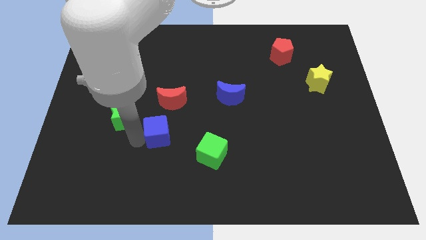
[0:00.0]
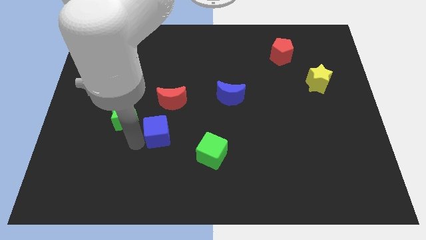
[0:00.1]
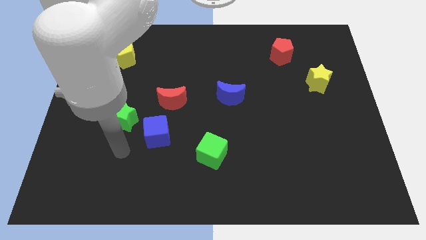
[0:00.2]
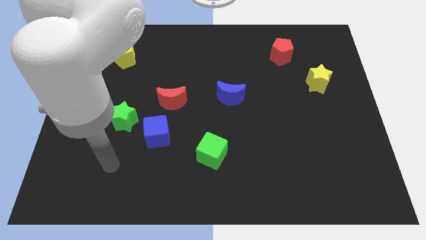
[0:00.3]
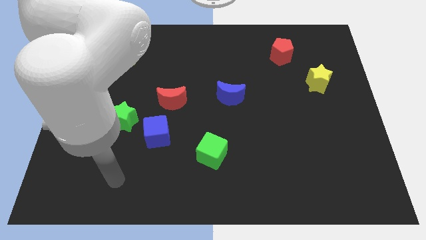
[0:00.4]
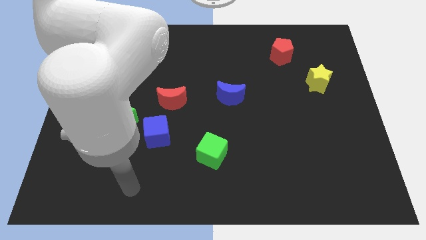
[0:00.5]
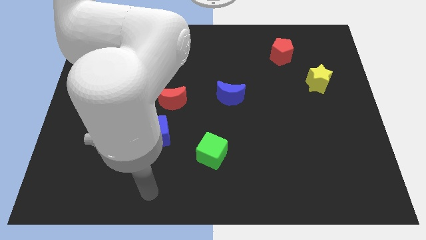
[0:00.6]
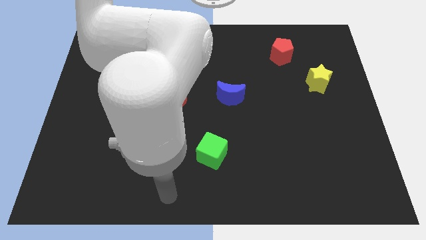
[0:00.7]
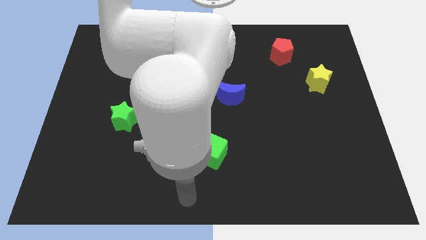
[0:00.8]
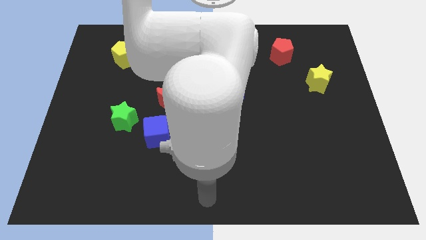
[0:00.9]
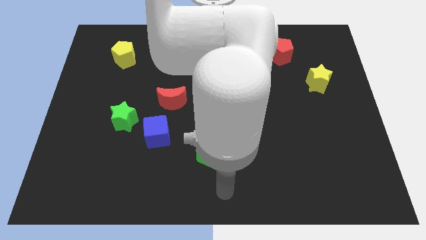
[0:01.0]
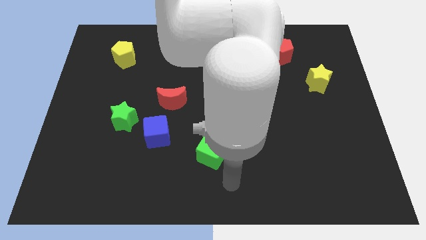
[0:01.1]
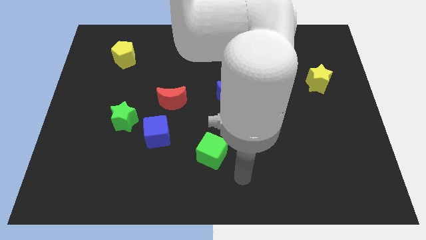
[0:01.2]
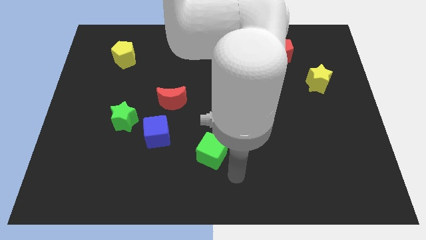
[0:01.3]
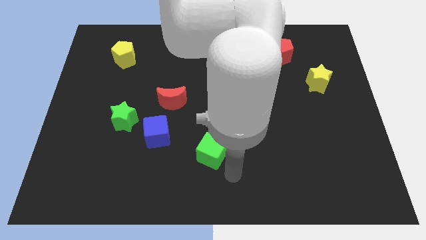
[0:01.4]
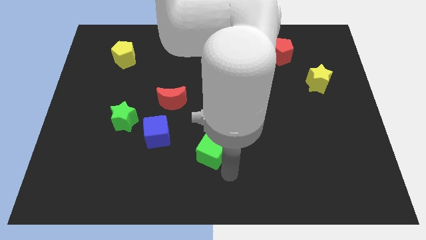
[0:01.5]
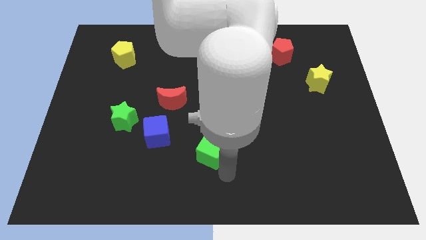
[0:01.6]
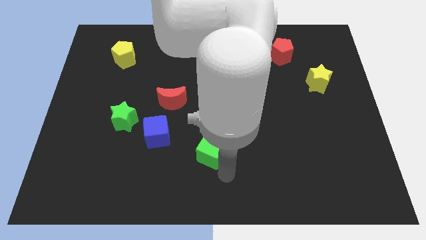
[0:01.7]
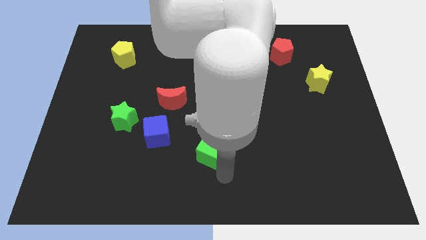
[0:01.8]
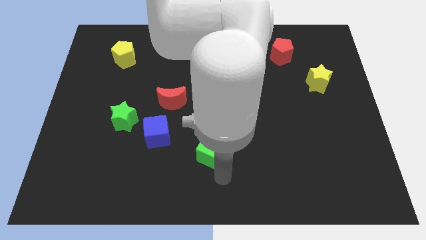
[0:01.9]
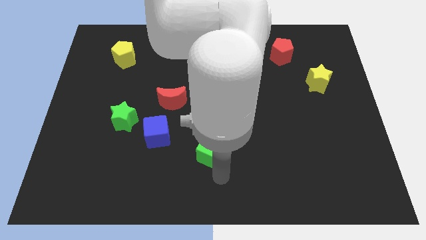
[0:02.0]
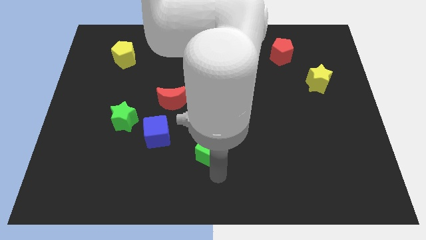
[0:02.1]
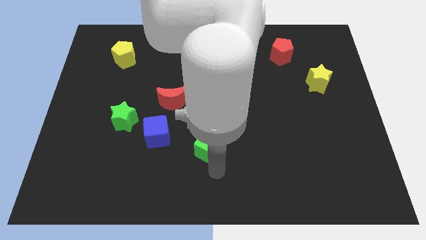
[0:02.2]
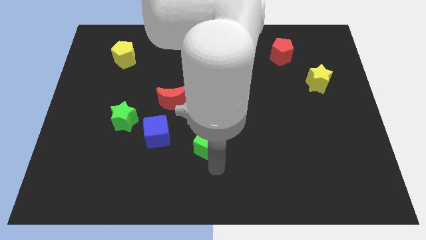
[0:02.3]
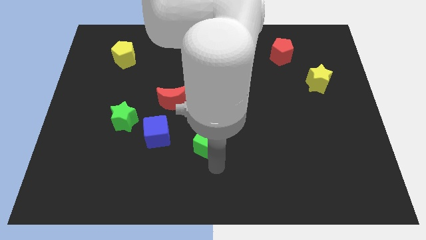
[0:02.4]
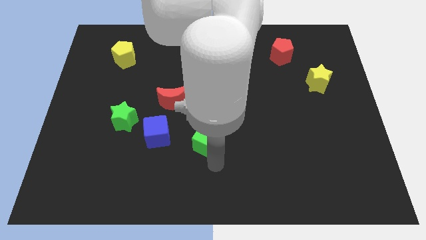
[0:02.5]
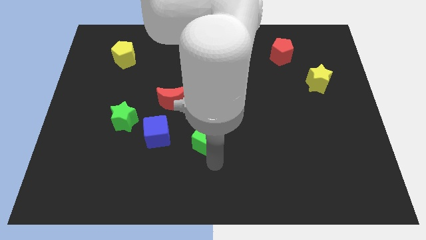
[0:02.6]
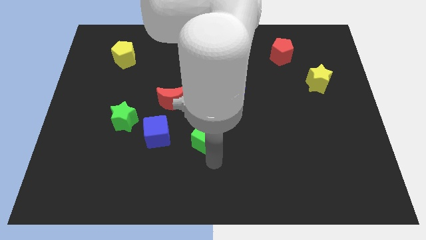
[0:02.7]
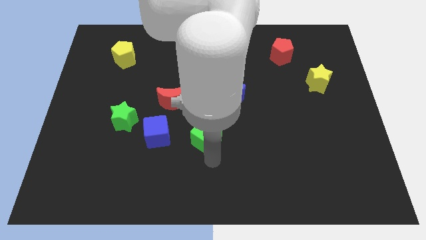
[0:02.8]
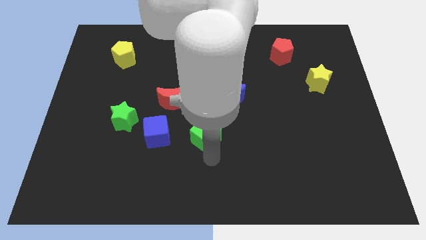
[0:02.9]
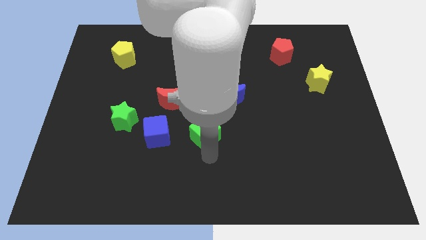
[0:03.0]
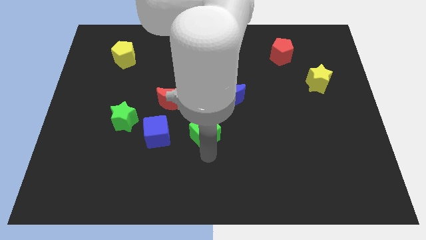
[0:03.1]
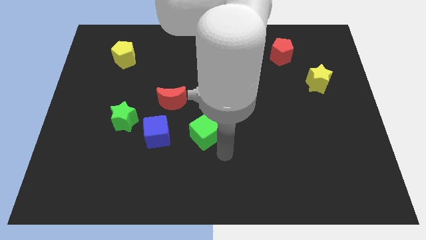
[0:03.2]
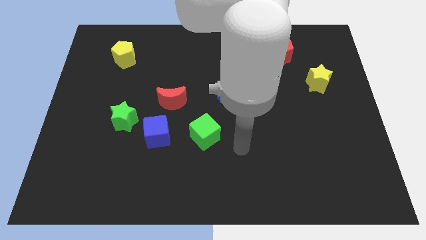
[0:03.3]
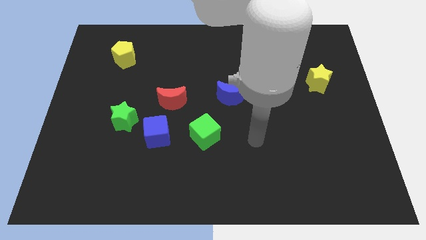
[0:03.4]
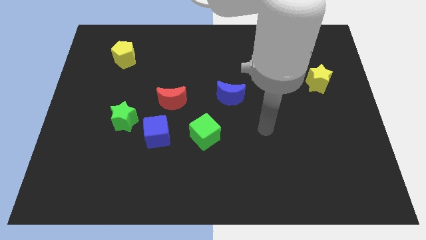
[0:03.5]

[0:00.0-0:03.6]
move the green cube to the right of the blue cube

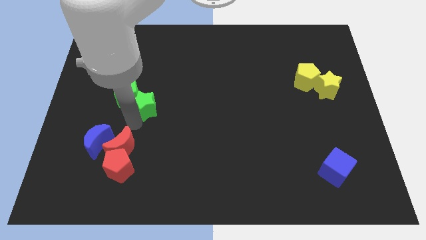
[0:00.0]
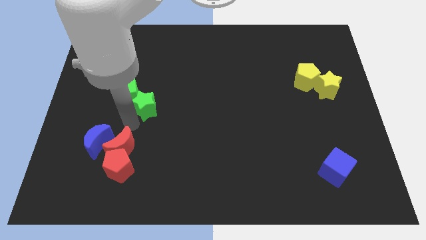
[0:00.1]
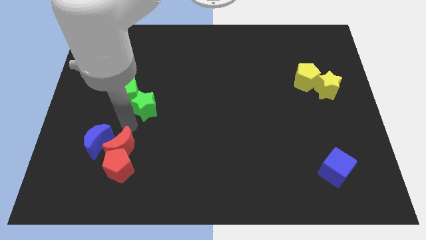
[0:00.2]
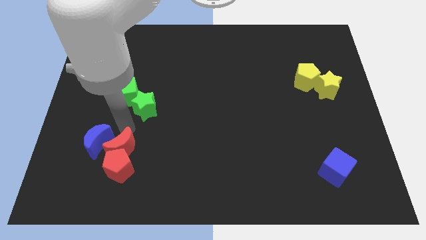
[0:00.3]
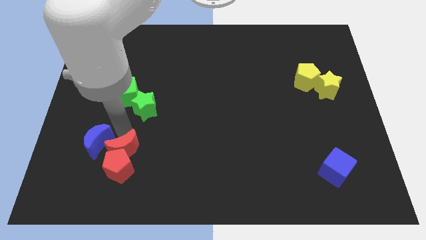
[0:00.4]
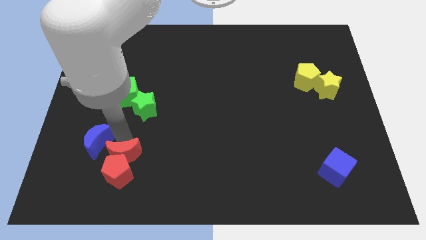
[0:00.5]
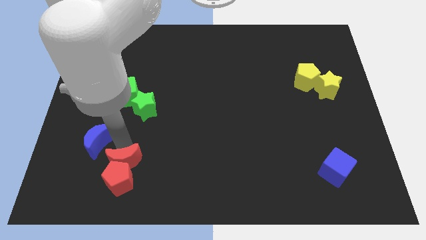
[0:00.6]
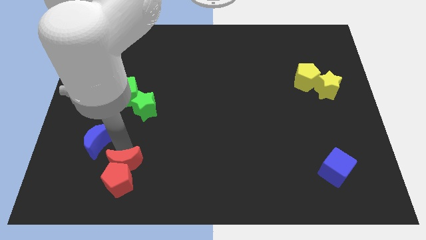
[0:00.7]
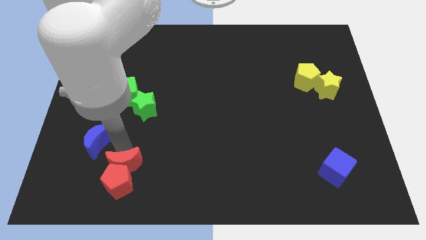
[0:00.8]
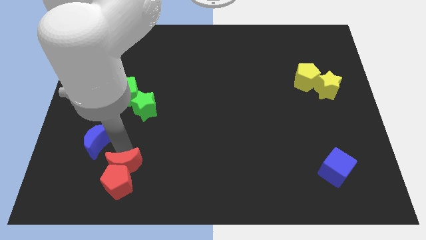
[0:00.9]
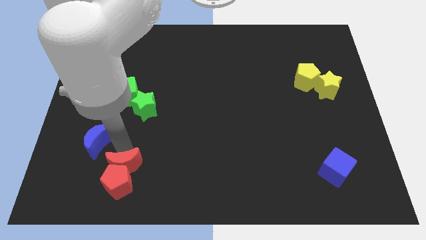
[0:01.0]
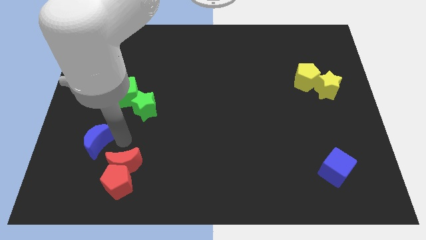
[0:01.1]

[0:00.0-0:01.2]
push the group of red blocks slightly downwards

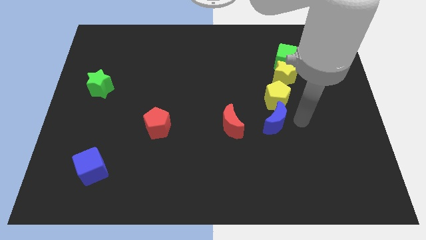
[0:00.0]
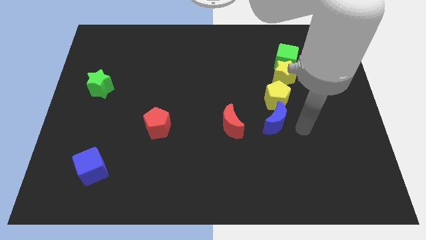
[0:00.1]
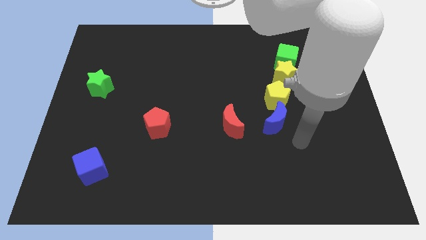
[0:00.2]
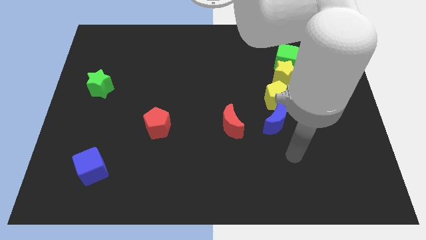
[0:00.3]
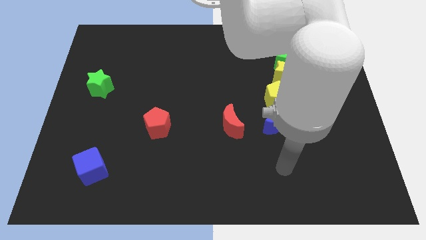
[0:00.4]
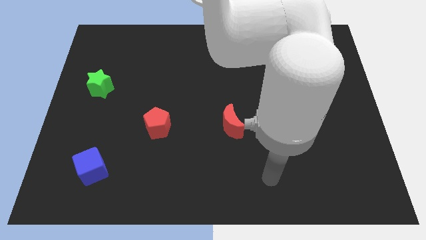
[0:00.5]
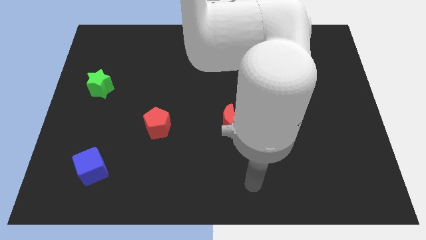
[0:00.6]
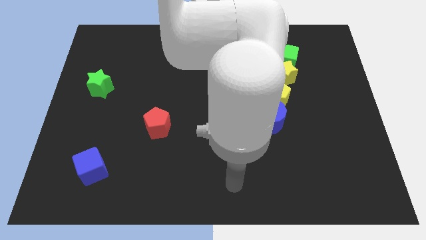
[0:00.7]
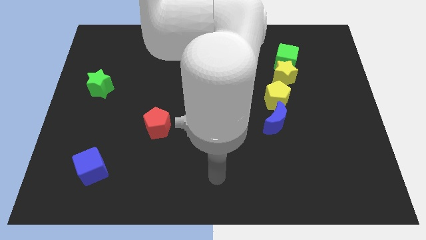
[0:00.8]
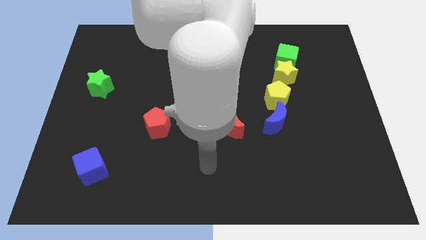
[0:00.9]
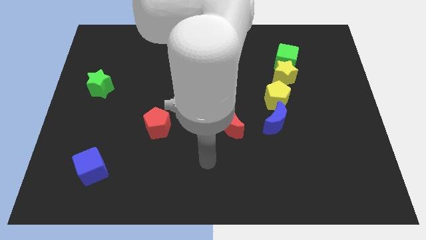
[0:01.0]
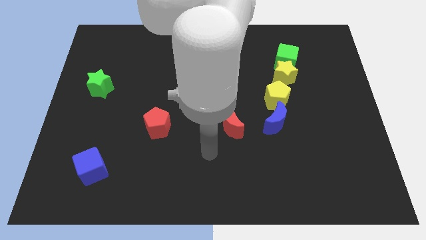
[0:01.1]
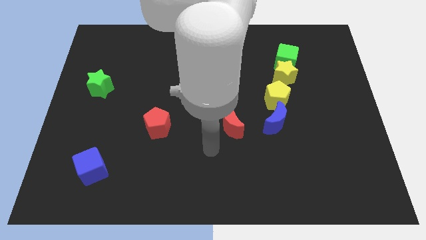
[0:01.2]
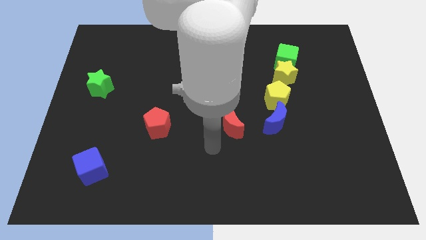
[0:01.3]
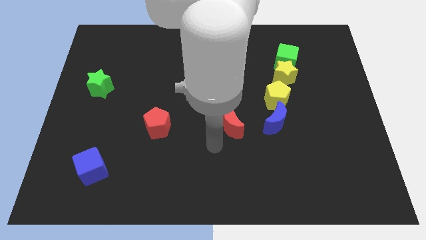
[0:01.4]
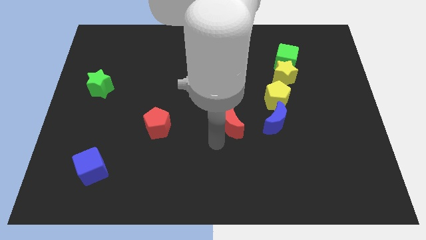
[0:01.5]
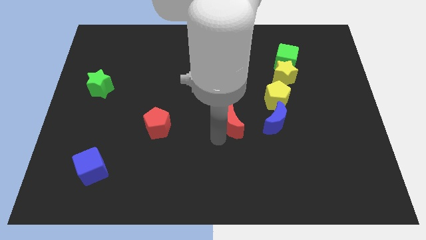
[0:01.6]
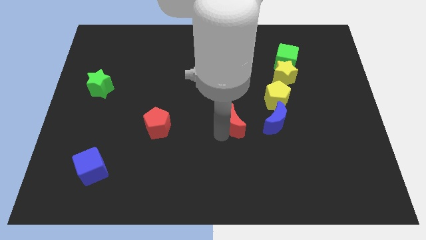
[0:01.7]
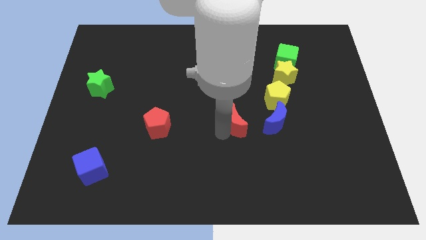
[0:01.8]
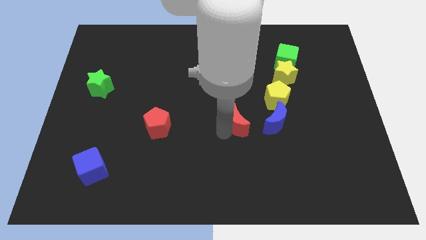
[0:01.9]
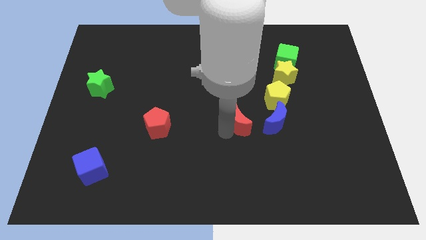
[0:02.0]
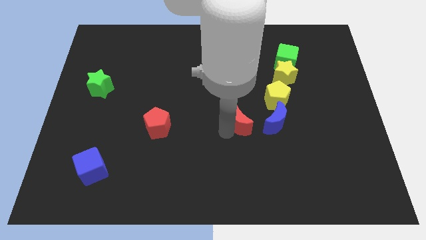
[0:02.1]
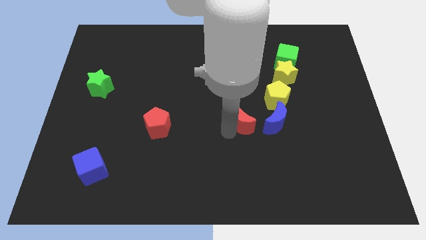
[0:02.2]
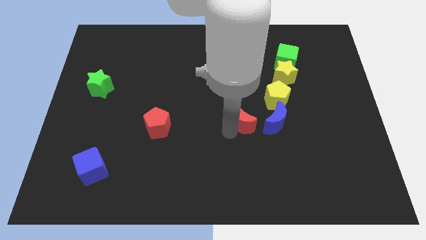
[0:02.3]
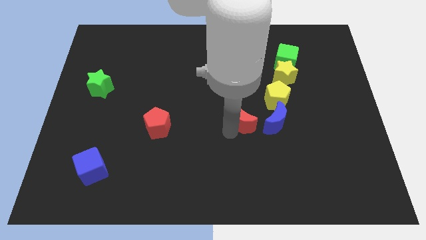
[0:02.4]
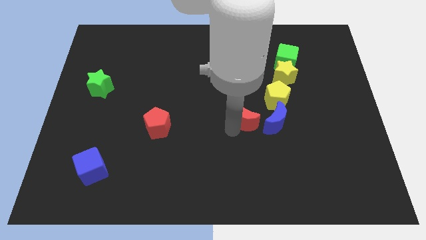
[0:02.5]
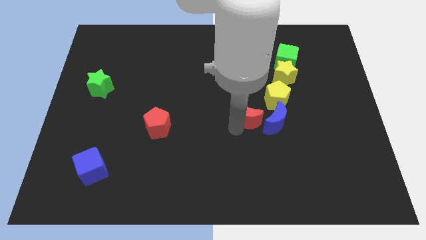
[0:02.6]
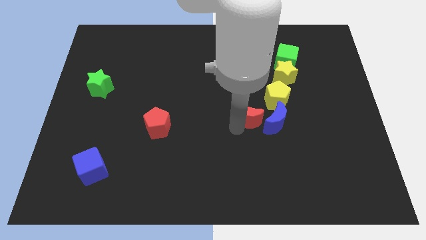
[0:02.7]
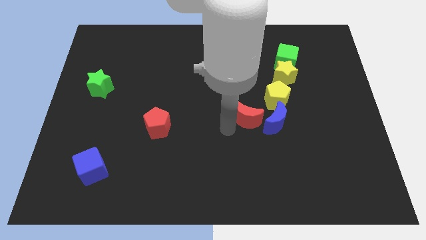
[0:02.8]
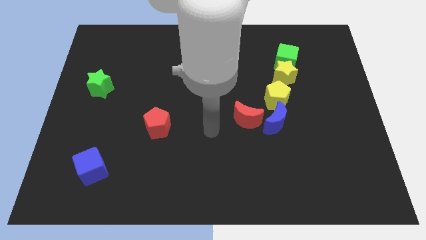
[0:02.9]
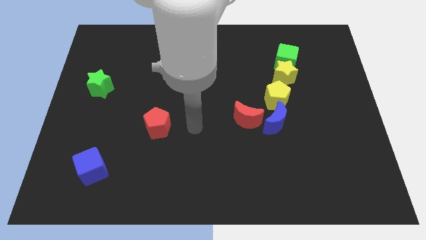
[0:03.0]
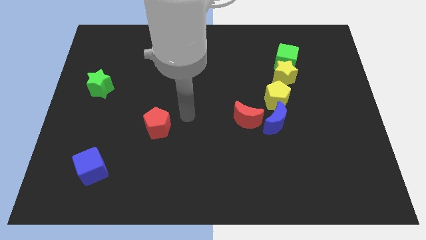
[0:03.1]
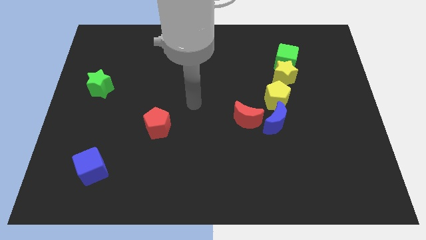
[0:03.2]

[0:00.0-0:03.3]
push the red crescent close to the blue crescent

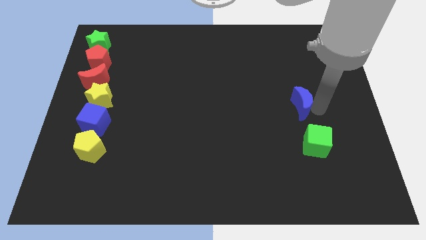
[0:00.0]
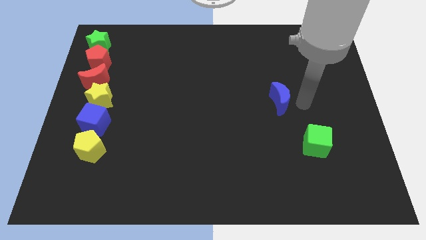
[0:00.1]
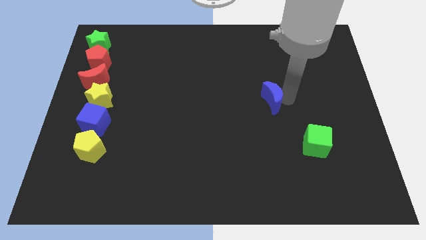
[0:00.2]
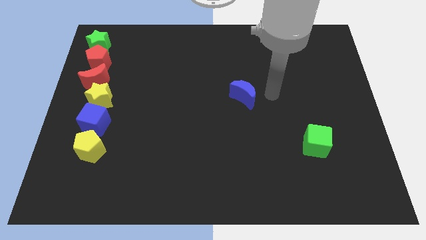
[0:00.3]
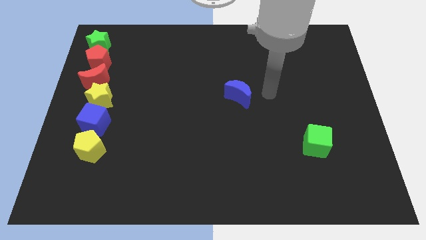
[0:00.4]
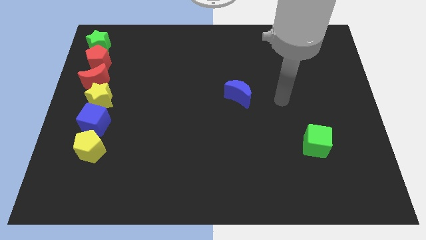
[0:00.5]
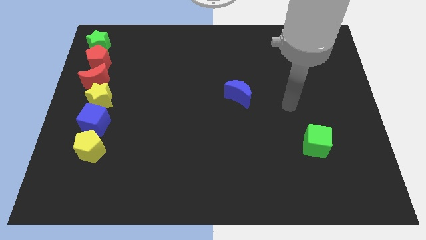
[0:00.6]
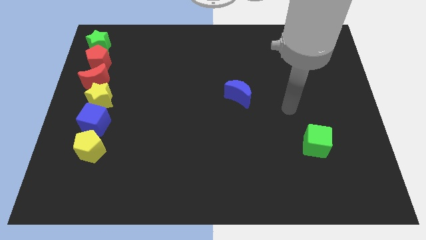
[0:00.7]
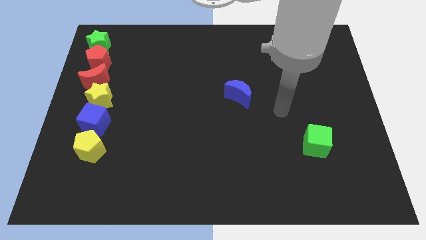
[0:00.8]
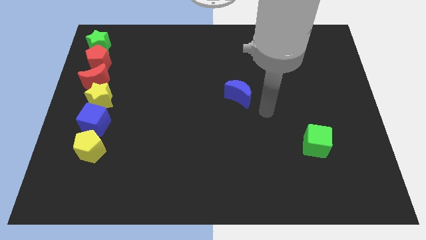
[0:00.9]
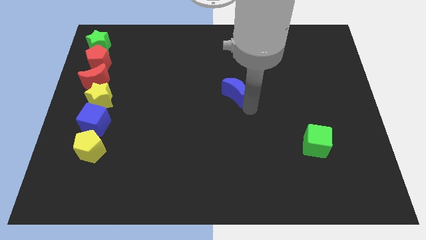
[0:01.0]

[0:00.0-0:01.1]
move the blue crescent to the left of the board

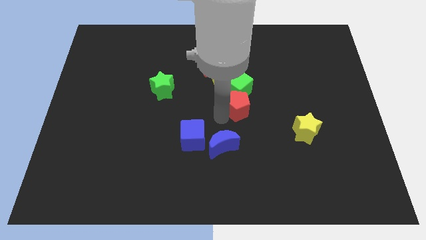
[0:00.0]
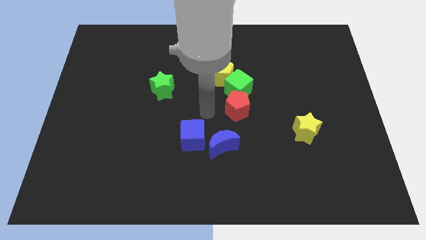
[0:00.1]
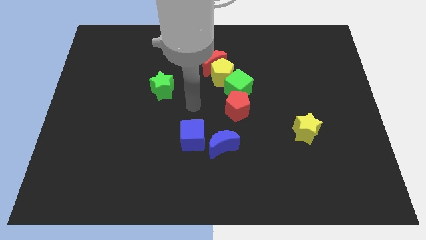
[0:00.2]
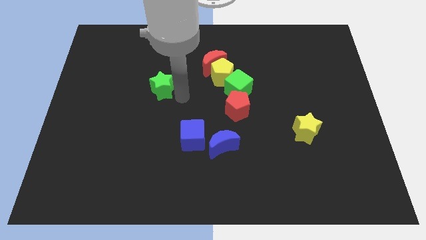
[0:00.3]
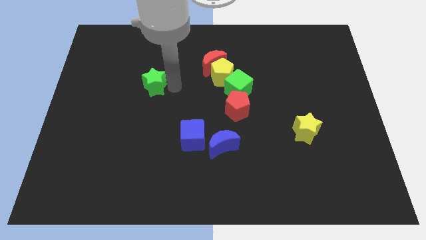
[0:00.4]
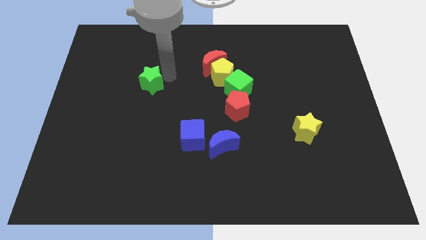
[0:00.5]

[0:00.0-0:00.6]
tap the bottom of green star
